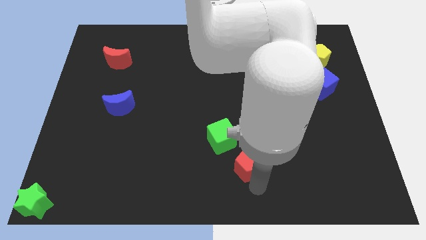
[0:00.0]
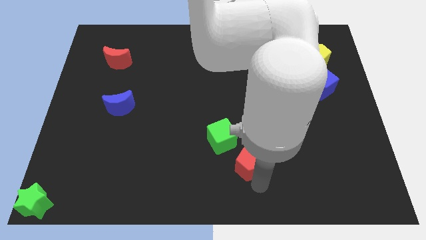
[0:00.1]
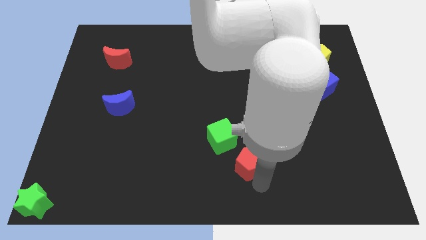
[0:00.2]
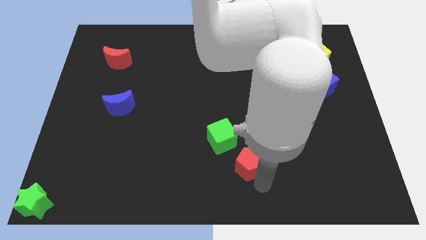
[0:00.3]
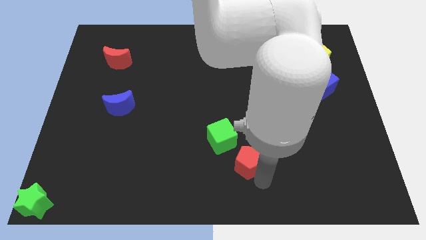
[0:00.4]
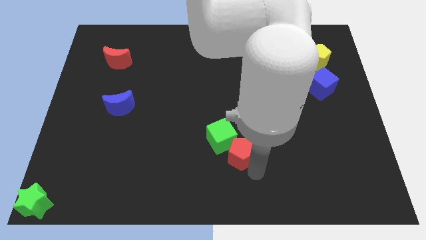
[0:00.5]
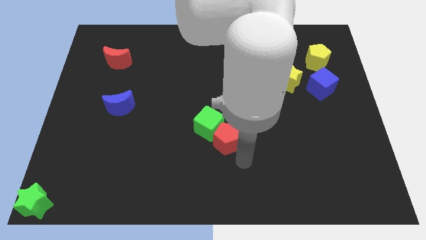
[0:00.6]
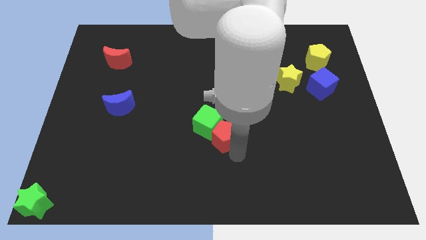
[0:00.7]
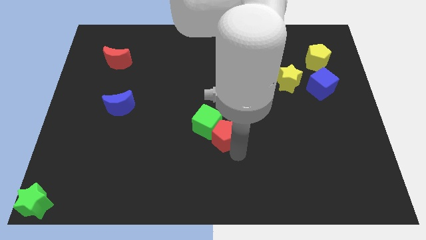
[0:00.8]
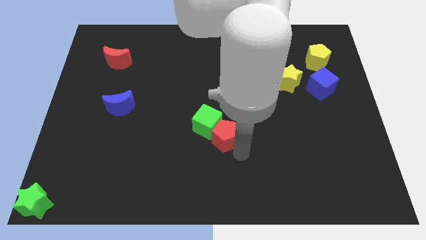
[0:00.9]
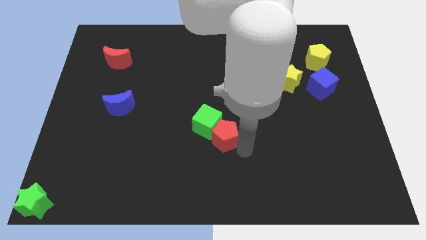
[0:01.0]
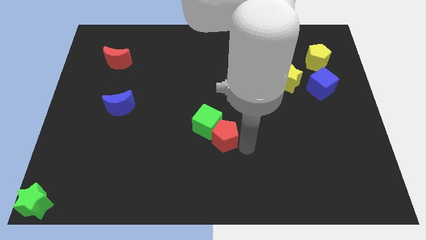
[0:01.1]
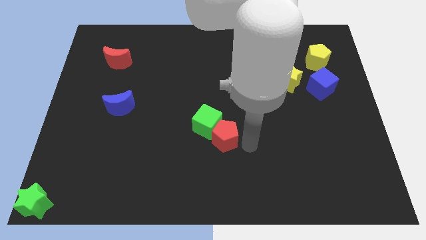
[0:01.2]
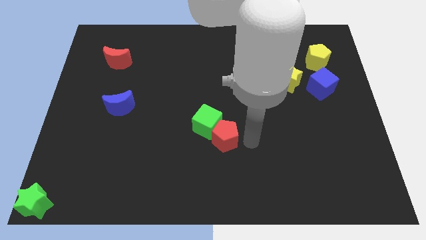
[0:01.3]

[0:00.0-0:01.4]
push the red pentagon and the green cube towards the center of the board

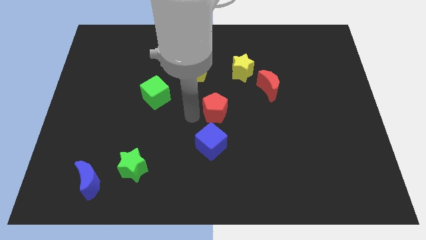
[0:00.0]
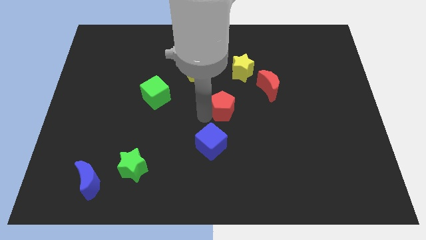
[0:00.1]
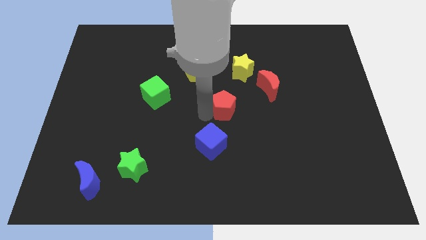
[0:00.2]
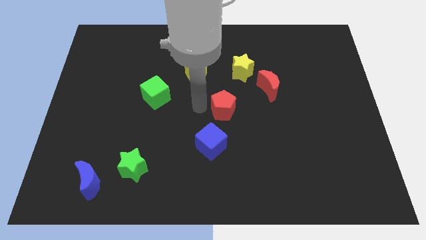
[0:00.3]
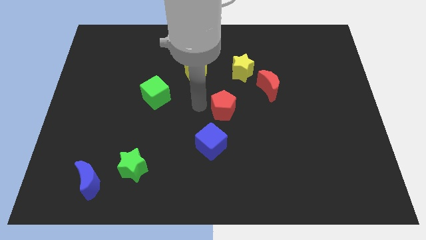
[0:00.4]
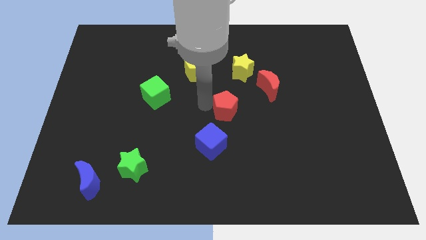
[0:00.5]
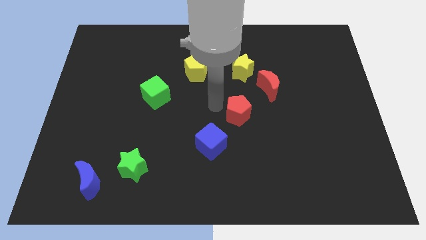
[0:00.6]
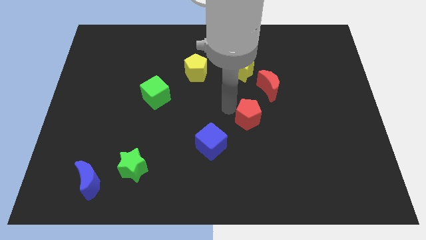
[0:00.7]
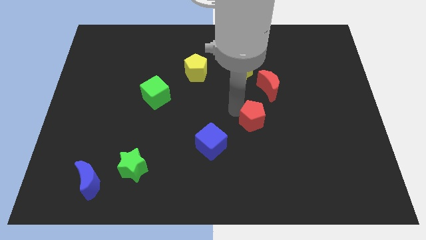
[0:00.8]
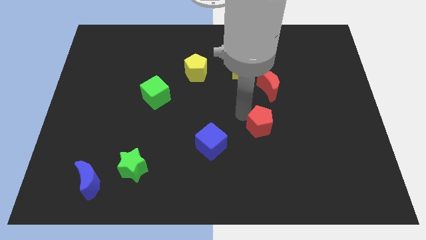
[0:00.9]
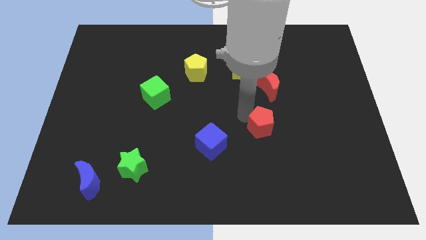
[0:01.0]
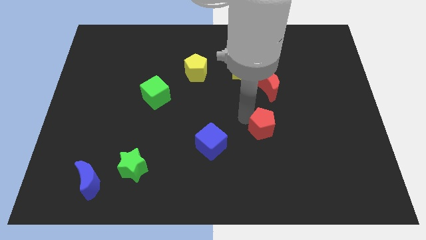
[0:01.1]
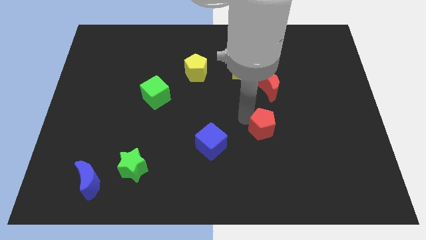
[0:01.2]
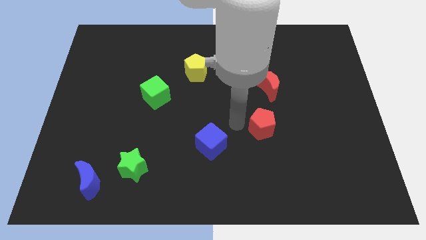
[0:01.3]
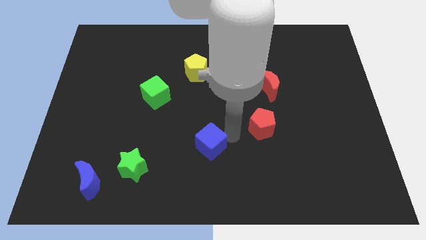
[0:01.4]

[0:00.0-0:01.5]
push the red pentagon below the red crescent

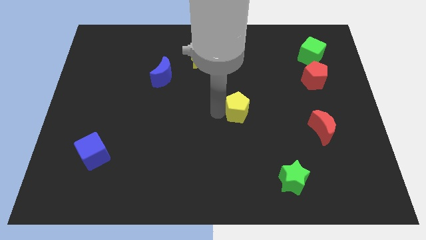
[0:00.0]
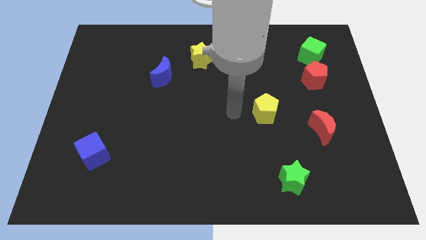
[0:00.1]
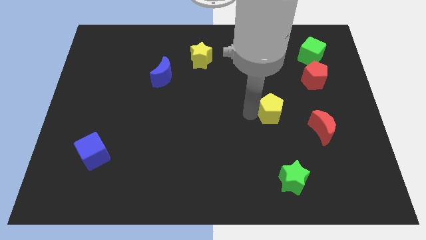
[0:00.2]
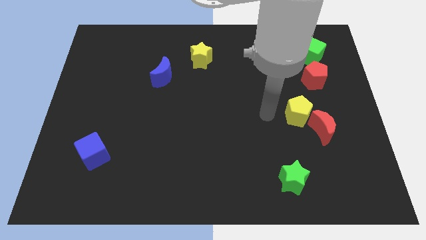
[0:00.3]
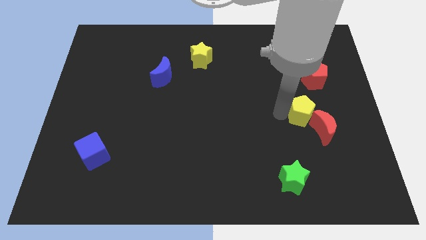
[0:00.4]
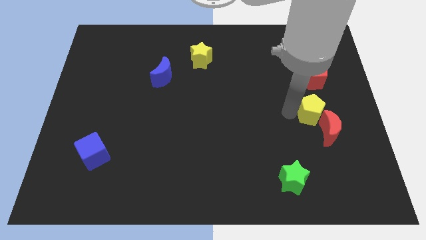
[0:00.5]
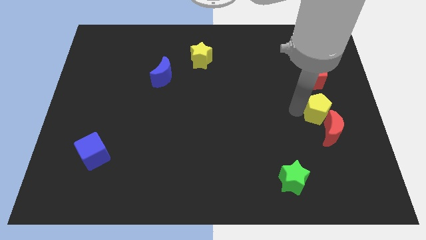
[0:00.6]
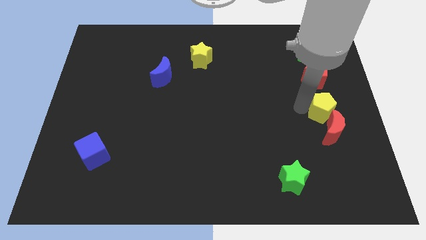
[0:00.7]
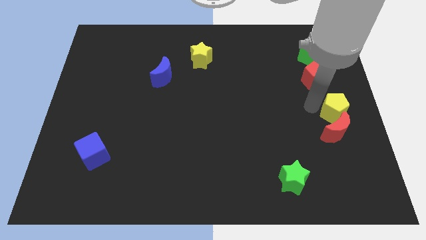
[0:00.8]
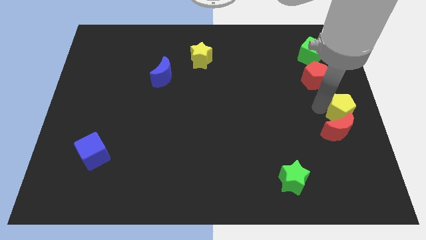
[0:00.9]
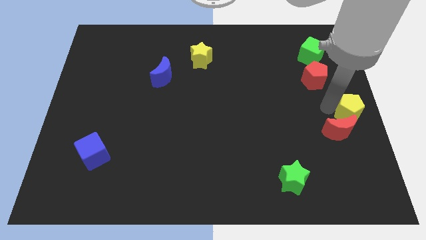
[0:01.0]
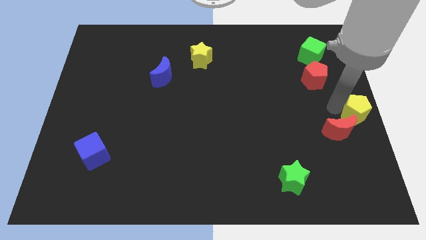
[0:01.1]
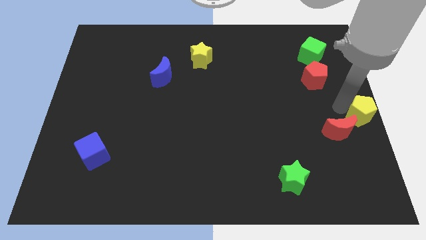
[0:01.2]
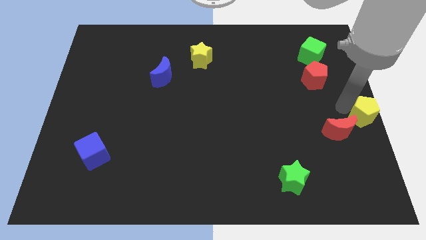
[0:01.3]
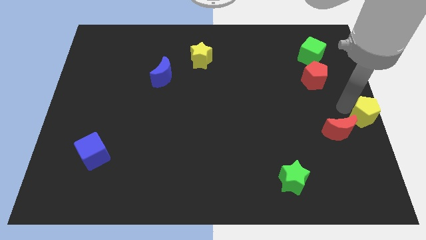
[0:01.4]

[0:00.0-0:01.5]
place the yellow pentagon to the center right of the board

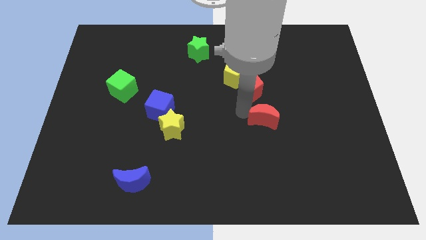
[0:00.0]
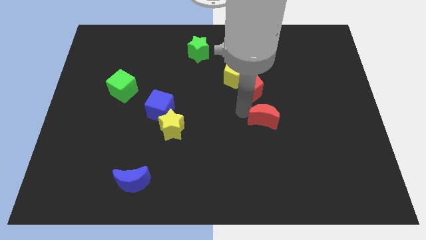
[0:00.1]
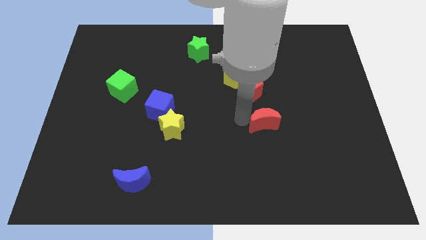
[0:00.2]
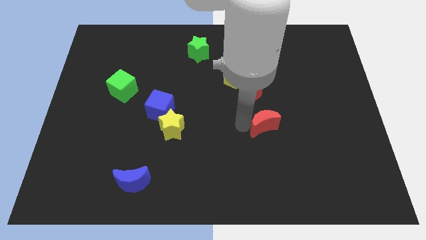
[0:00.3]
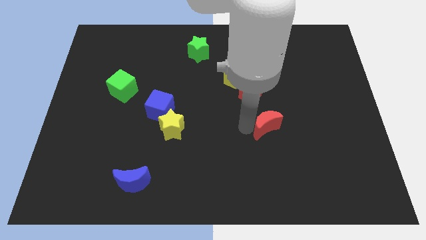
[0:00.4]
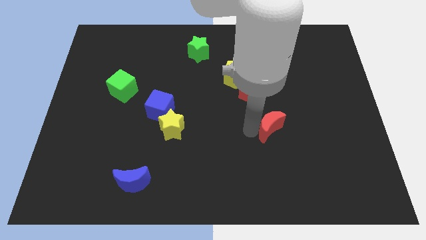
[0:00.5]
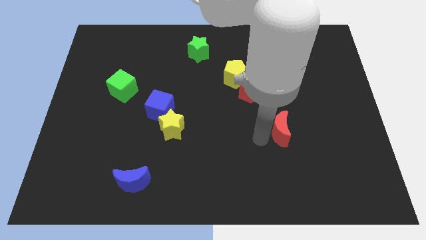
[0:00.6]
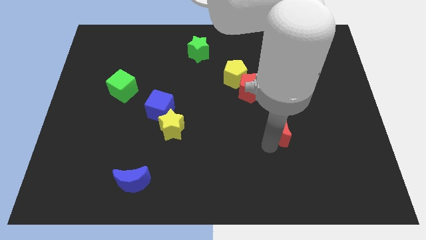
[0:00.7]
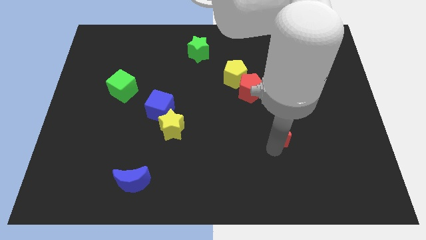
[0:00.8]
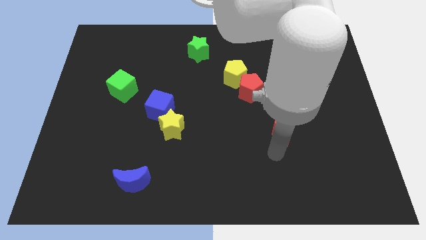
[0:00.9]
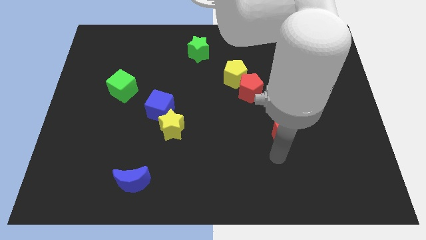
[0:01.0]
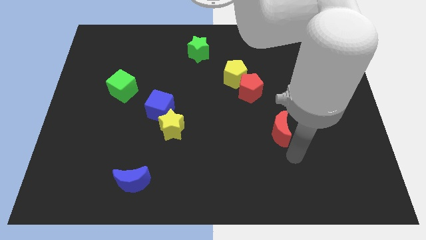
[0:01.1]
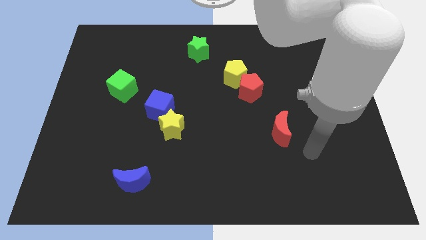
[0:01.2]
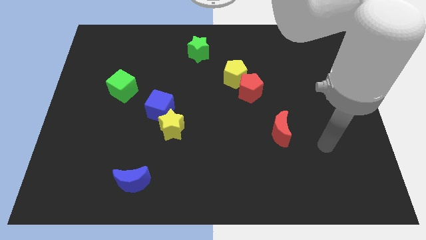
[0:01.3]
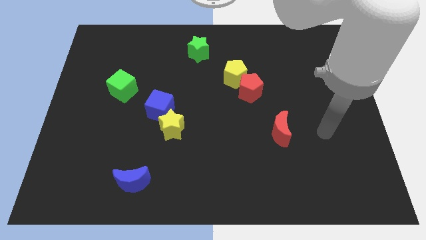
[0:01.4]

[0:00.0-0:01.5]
place the red moon diagonally to red pentagon

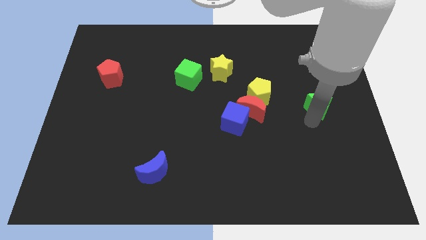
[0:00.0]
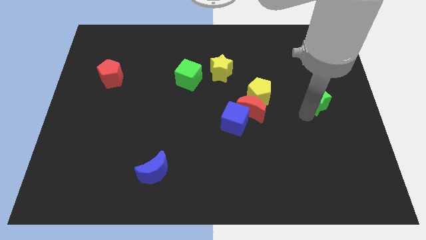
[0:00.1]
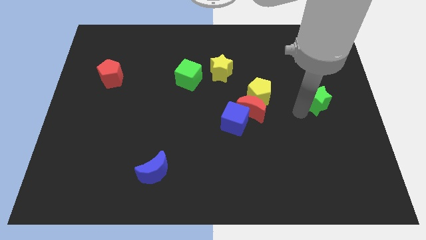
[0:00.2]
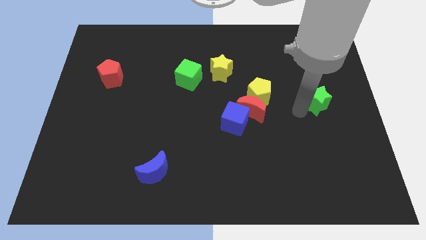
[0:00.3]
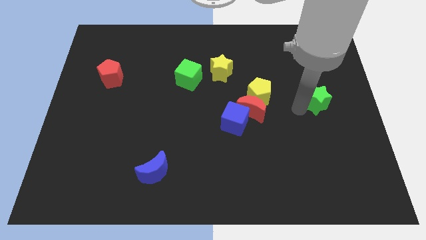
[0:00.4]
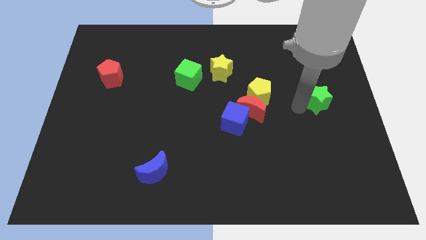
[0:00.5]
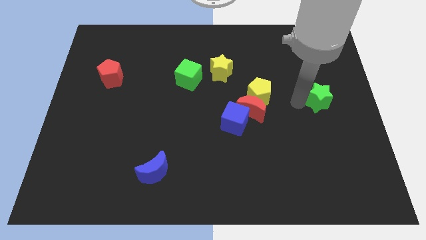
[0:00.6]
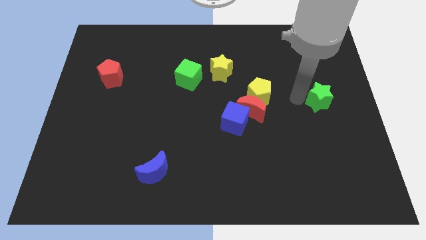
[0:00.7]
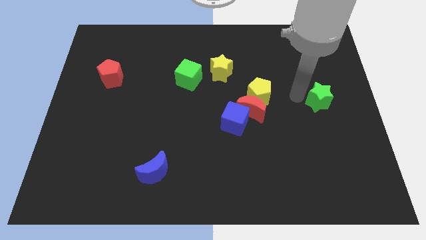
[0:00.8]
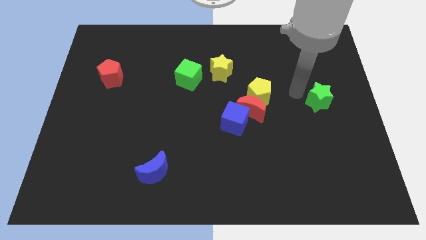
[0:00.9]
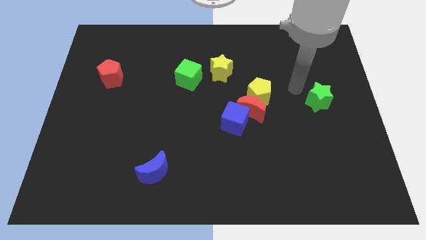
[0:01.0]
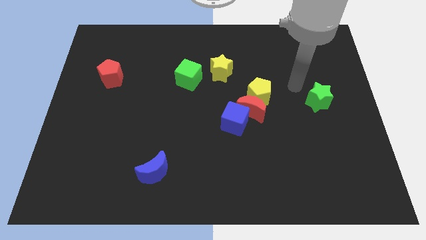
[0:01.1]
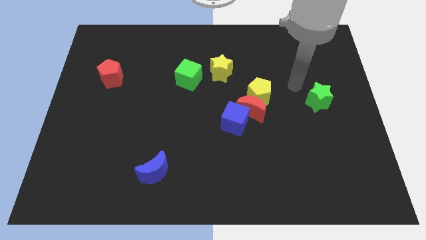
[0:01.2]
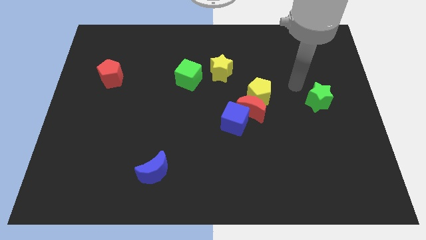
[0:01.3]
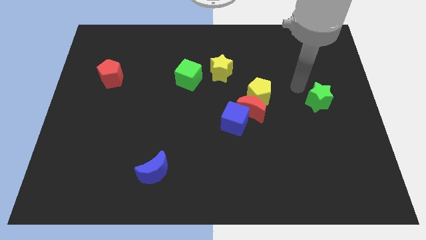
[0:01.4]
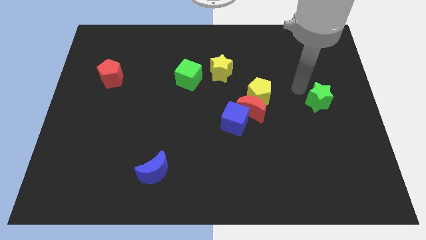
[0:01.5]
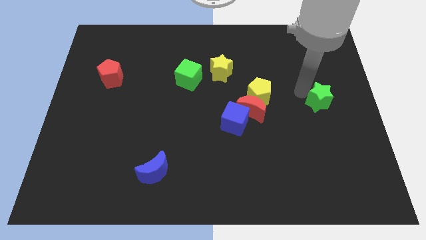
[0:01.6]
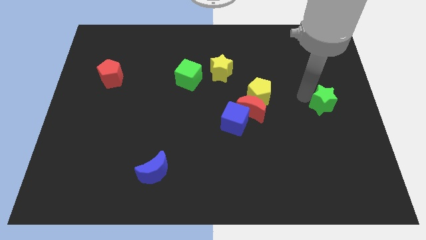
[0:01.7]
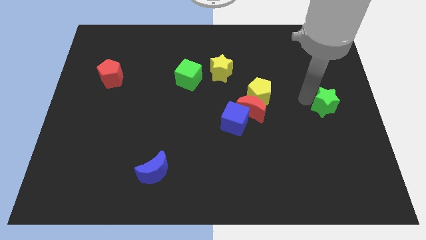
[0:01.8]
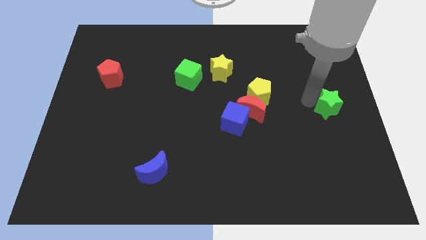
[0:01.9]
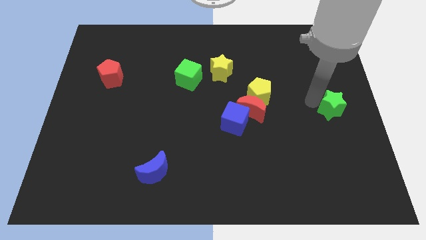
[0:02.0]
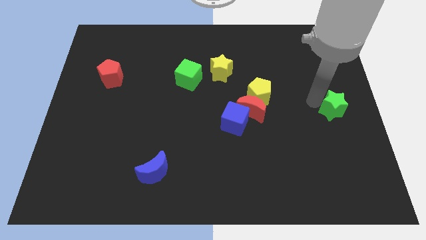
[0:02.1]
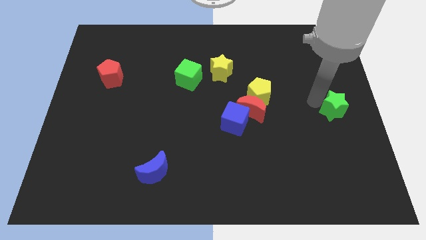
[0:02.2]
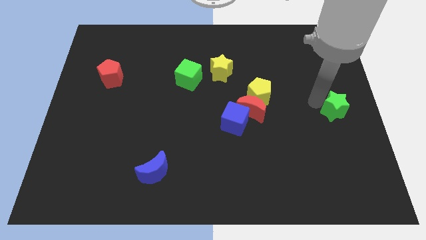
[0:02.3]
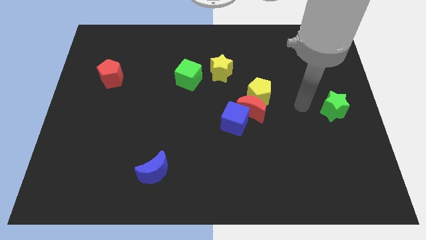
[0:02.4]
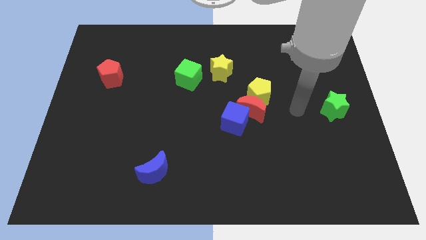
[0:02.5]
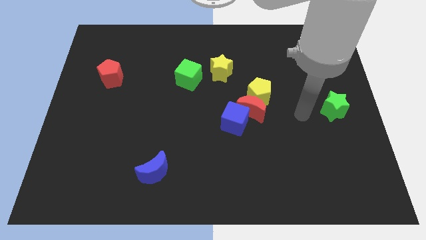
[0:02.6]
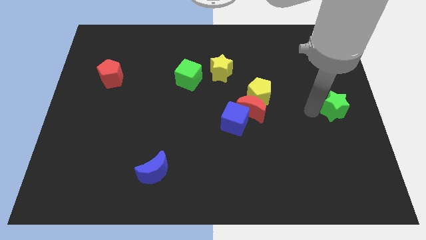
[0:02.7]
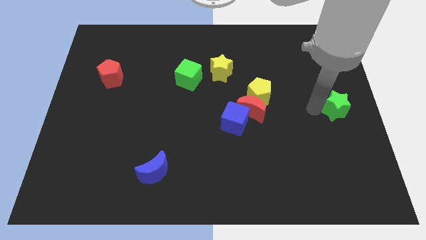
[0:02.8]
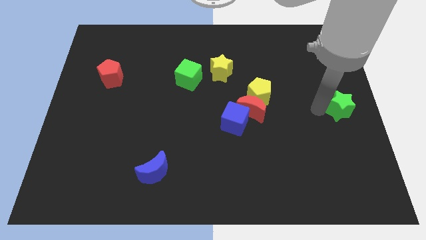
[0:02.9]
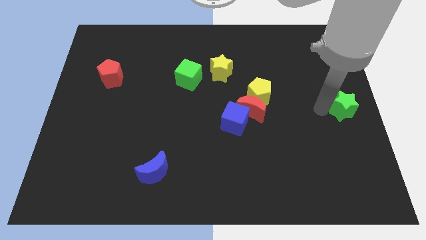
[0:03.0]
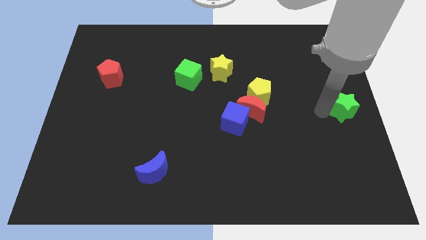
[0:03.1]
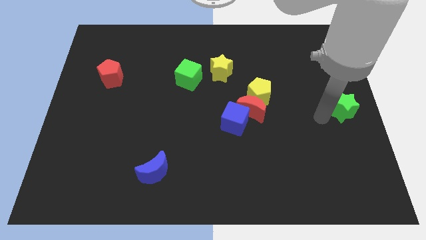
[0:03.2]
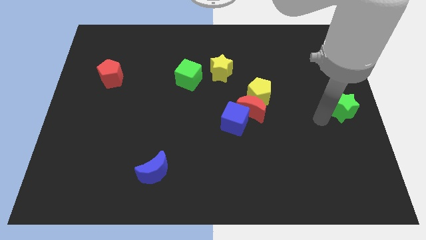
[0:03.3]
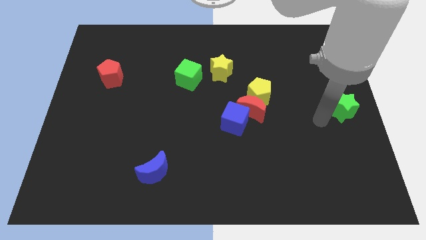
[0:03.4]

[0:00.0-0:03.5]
push the green star to the center right of the board
